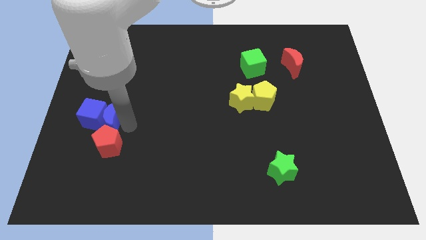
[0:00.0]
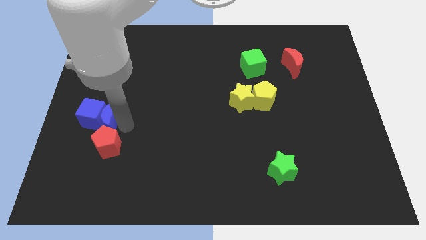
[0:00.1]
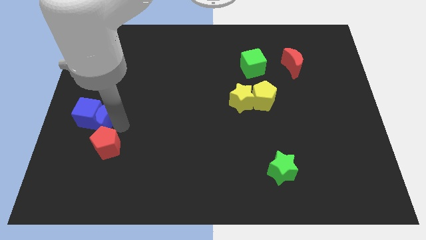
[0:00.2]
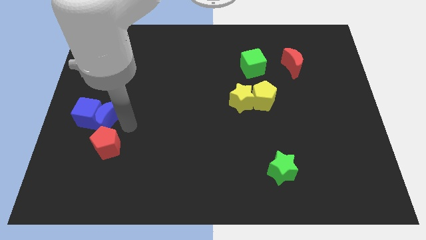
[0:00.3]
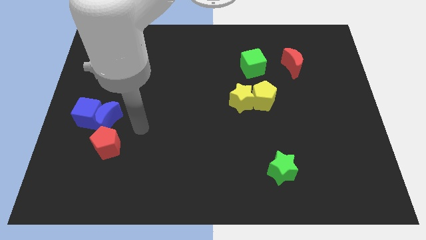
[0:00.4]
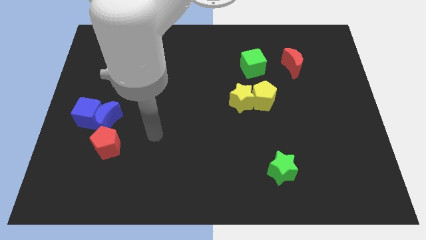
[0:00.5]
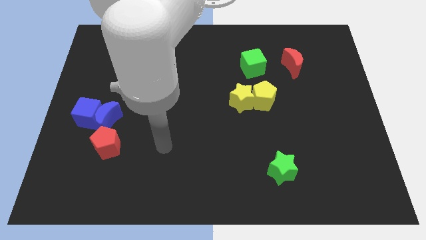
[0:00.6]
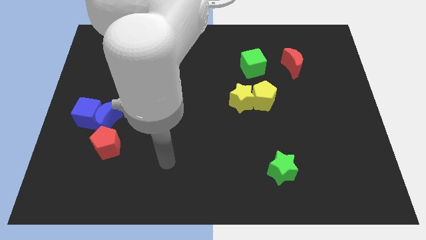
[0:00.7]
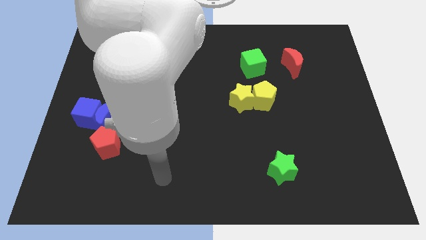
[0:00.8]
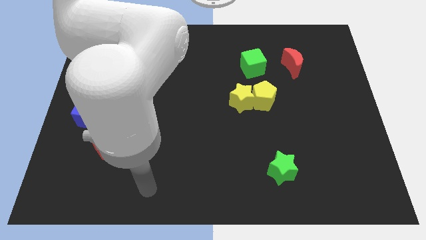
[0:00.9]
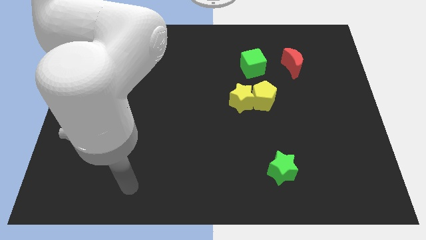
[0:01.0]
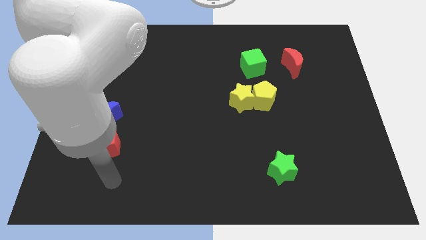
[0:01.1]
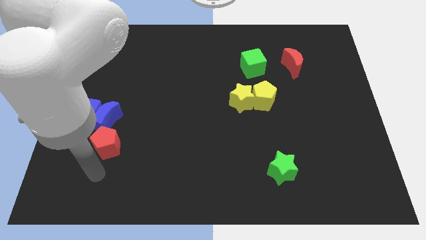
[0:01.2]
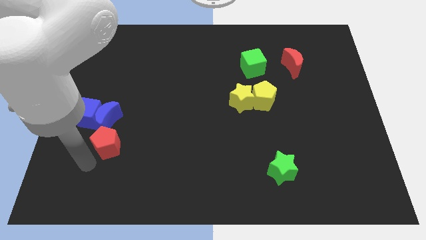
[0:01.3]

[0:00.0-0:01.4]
move the arm below the red pentagon

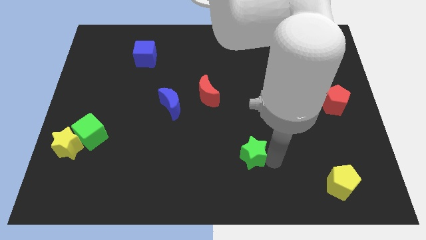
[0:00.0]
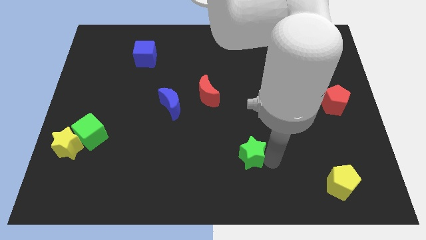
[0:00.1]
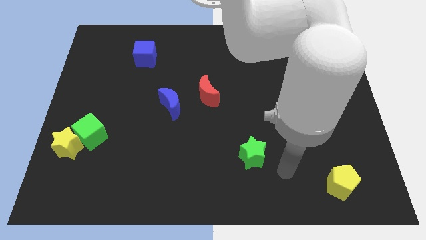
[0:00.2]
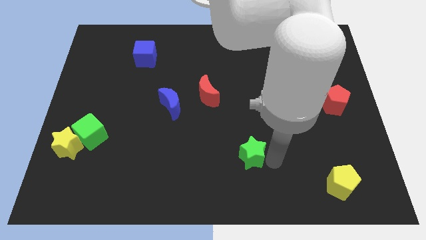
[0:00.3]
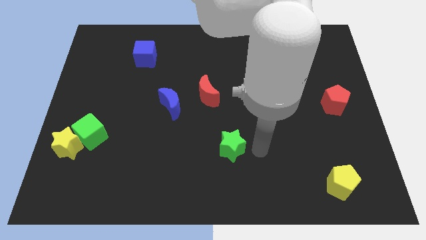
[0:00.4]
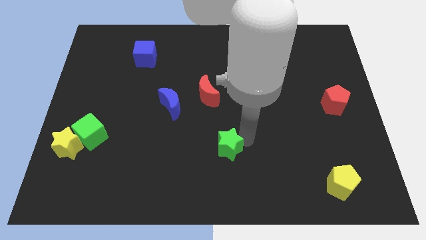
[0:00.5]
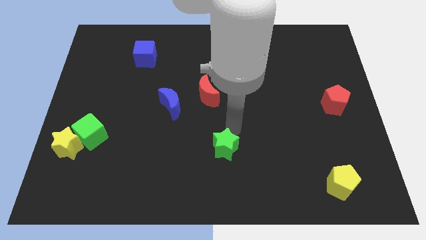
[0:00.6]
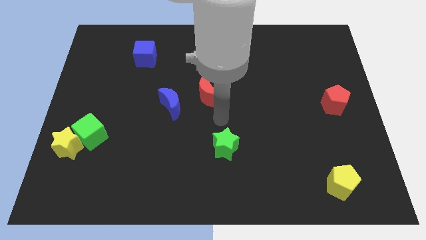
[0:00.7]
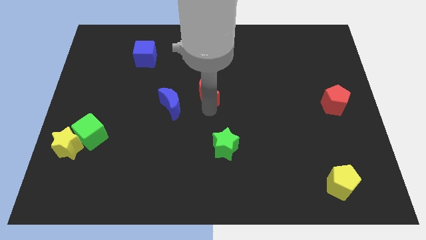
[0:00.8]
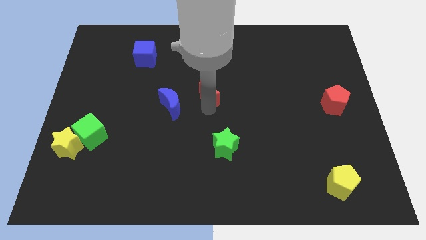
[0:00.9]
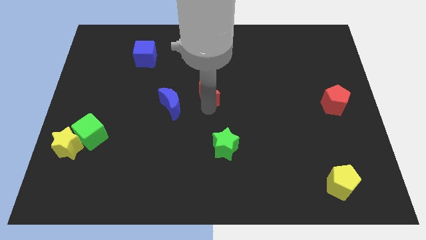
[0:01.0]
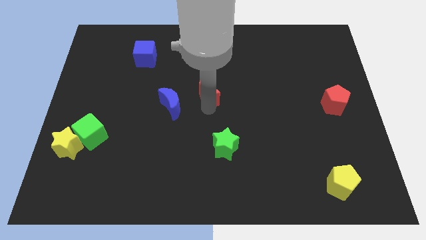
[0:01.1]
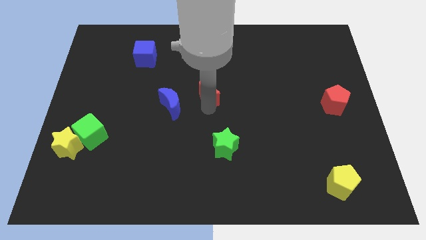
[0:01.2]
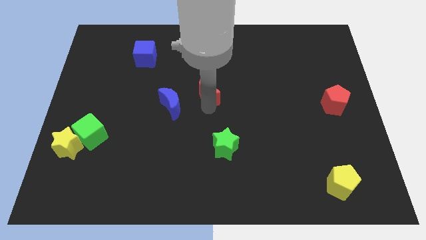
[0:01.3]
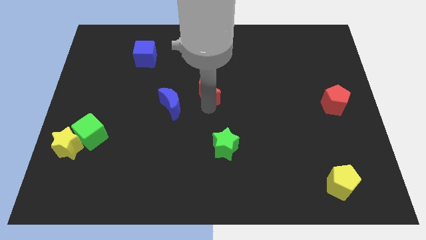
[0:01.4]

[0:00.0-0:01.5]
slightly tap on the red crescent

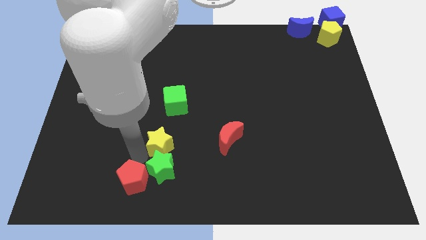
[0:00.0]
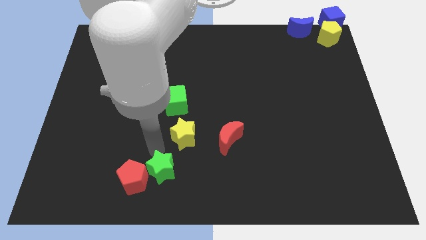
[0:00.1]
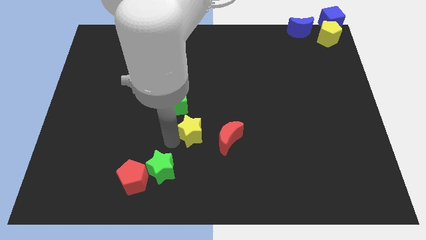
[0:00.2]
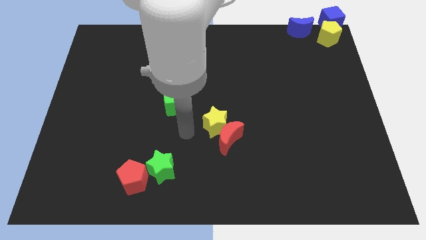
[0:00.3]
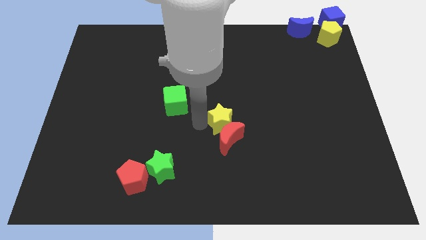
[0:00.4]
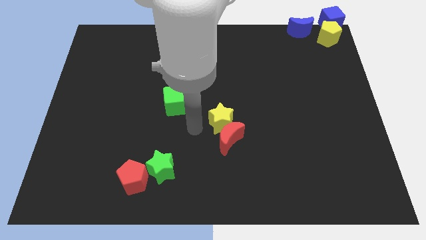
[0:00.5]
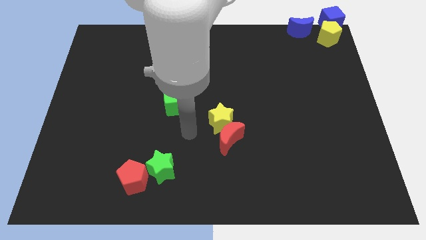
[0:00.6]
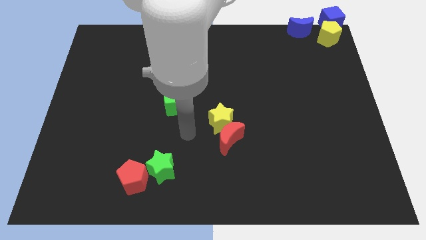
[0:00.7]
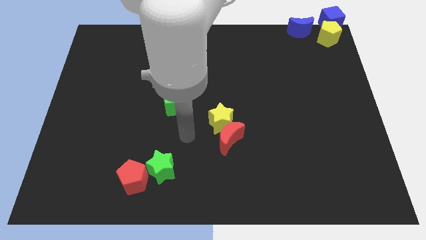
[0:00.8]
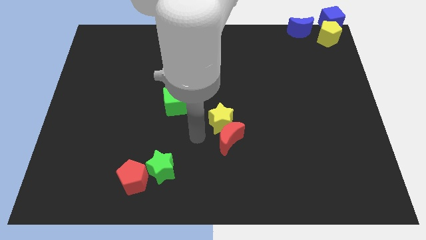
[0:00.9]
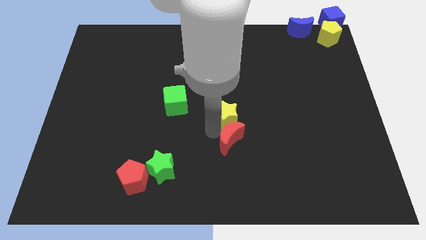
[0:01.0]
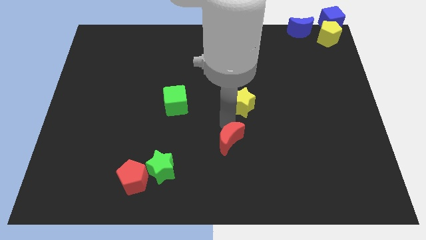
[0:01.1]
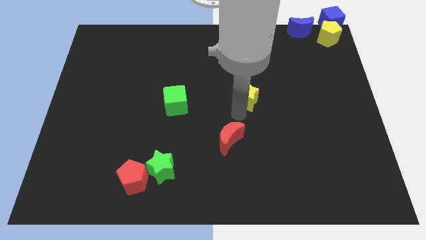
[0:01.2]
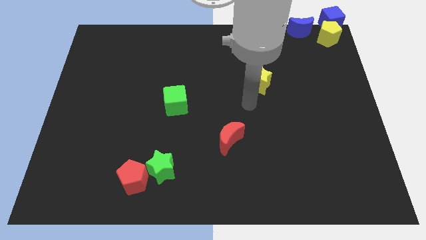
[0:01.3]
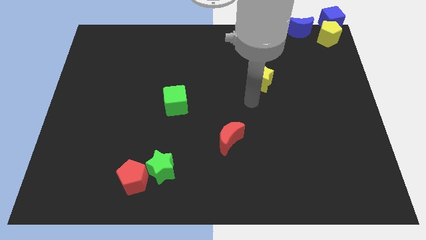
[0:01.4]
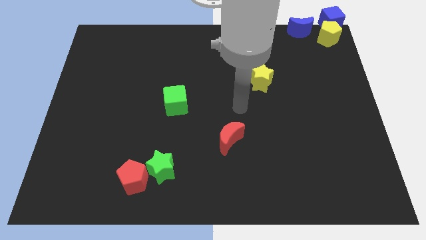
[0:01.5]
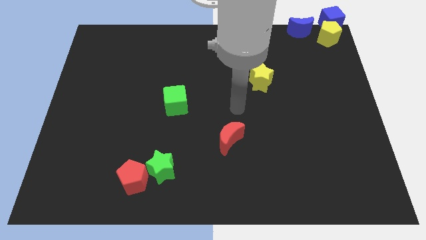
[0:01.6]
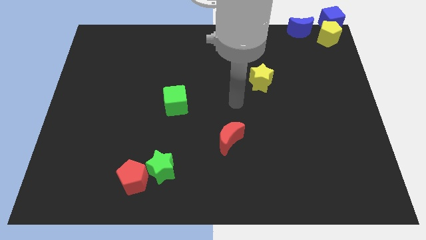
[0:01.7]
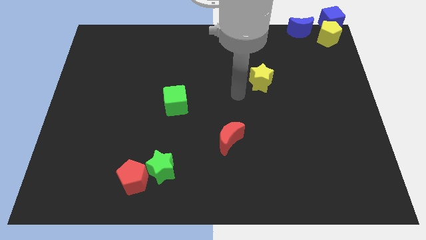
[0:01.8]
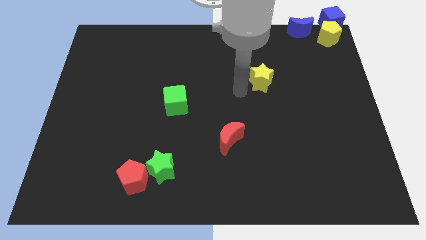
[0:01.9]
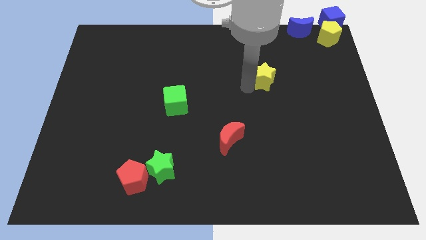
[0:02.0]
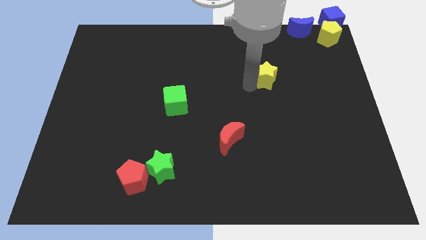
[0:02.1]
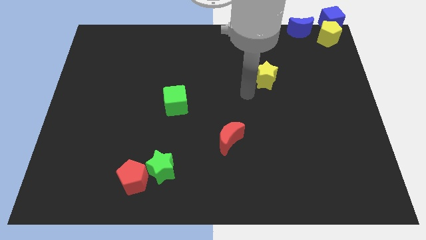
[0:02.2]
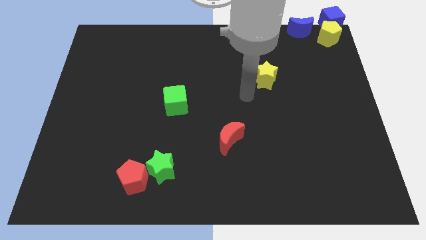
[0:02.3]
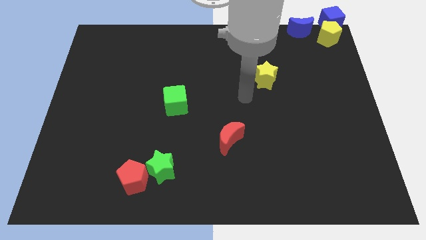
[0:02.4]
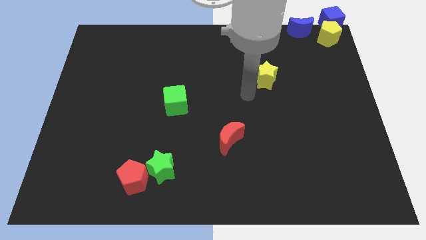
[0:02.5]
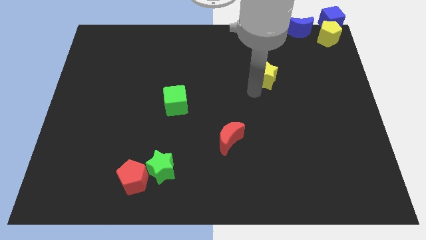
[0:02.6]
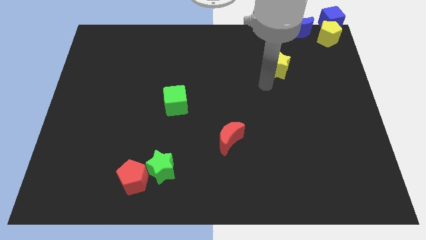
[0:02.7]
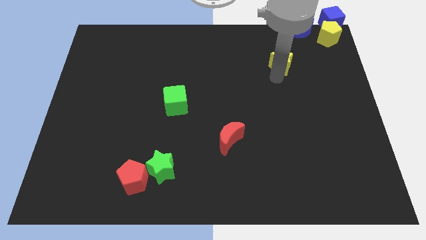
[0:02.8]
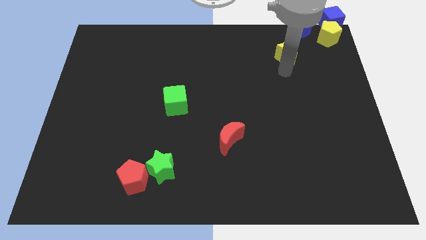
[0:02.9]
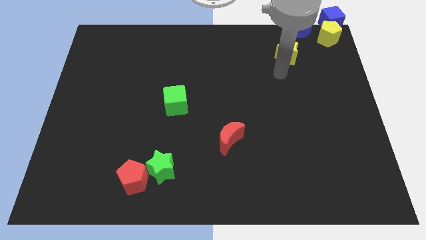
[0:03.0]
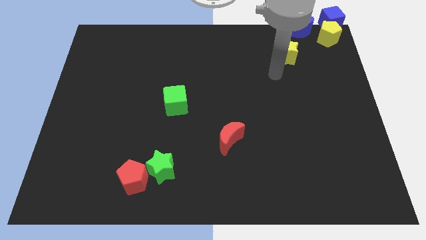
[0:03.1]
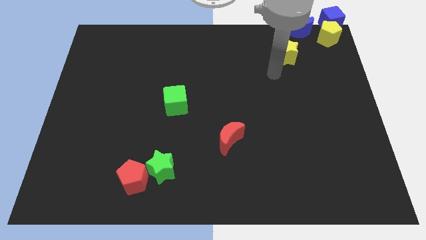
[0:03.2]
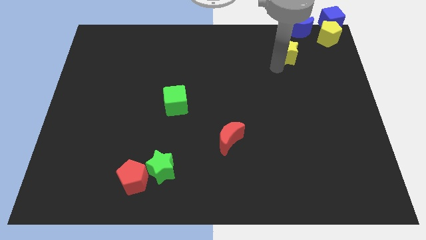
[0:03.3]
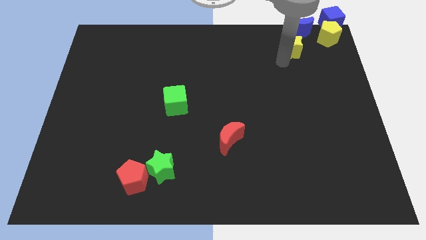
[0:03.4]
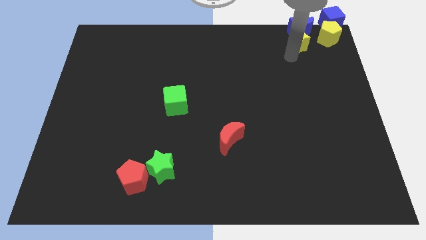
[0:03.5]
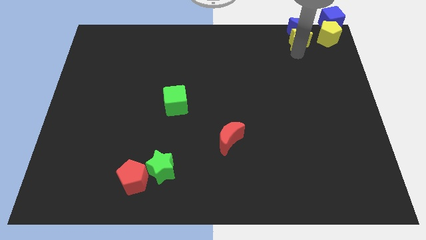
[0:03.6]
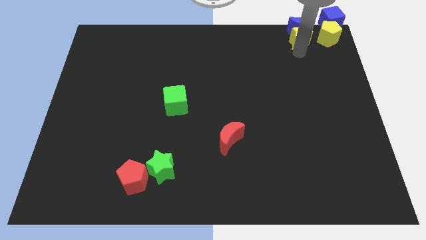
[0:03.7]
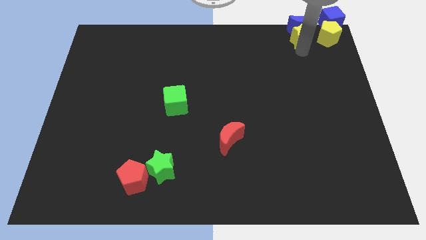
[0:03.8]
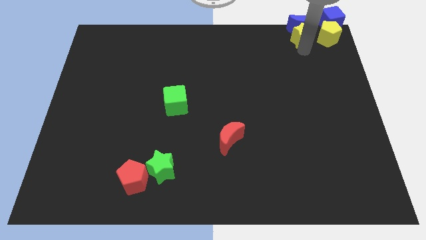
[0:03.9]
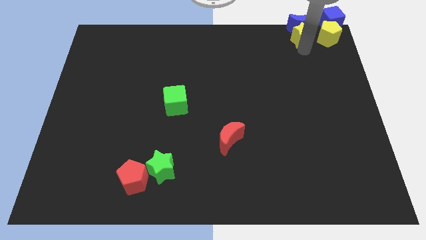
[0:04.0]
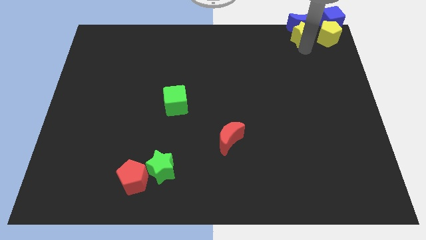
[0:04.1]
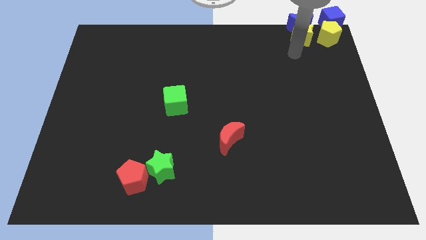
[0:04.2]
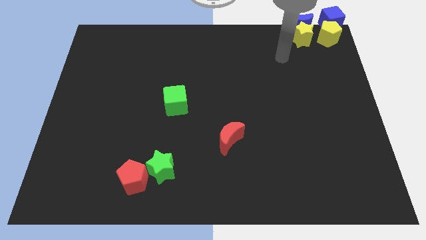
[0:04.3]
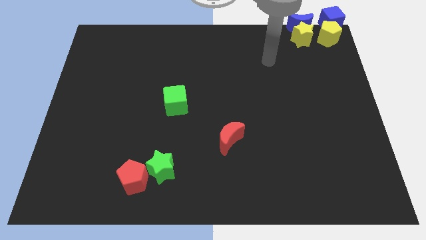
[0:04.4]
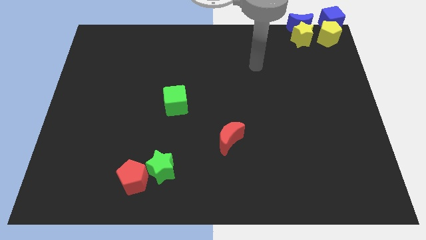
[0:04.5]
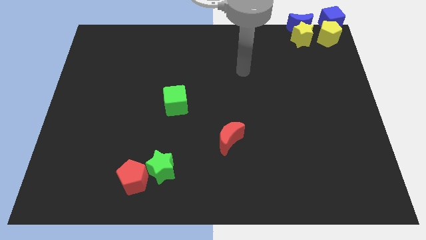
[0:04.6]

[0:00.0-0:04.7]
place the yellow star below the blue moon

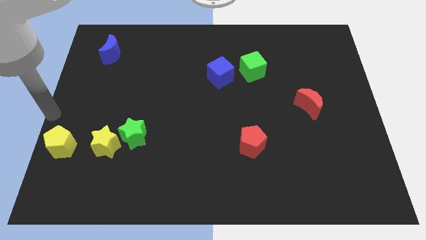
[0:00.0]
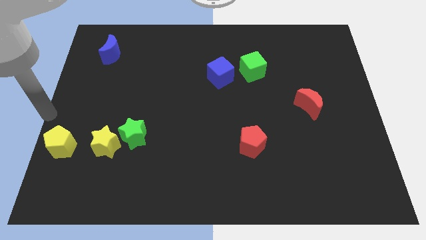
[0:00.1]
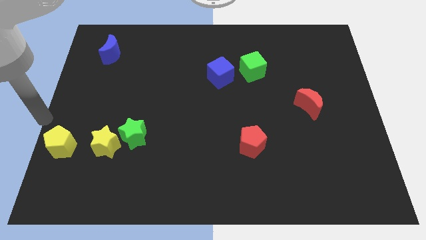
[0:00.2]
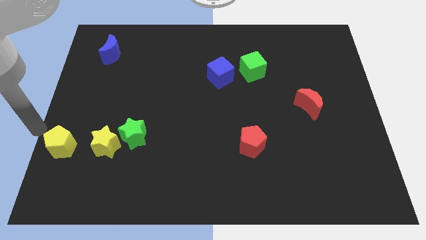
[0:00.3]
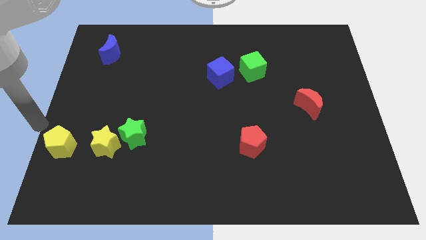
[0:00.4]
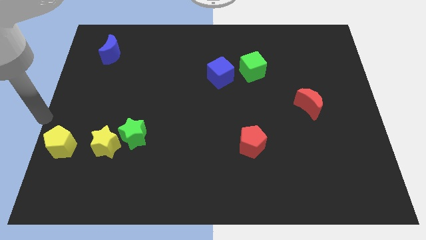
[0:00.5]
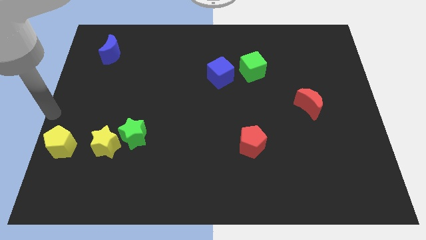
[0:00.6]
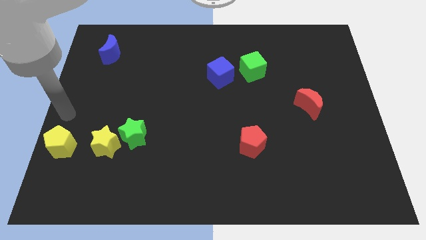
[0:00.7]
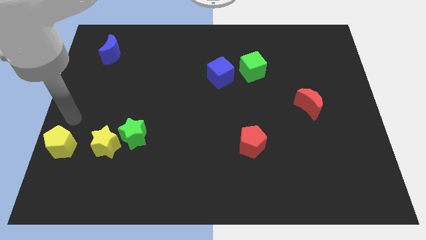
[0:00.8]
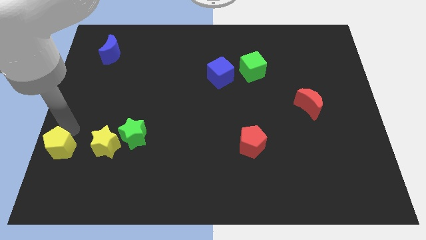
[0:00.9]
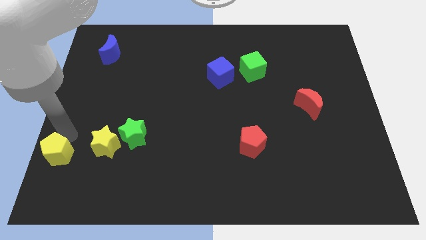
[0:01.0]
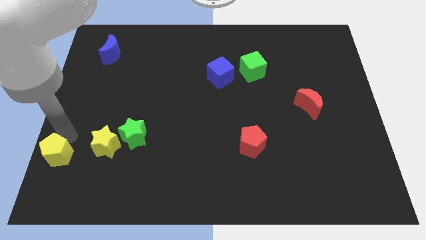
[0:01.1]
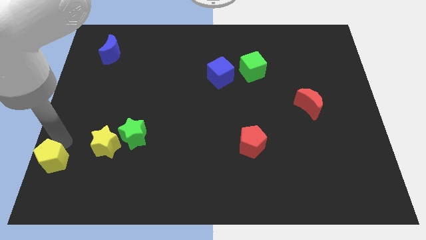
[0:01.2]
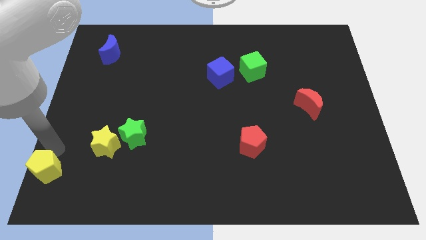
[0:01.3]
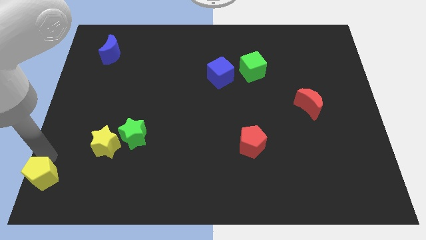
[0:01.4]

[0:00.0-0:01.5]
push the yellow pentagon slightly to the bottom left side
